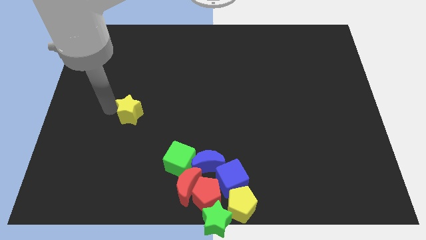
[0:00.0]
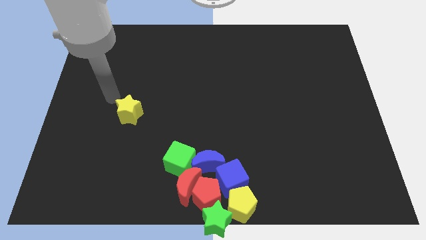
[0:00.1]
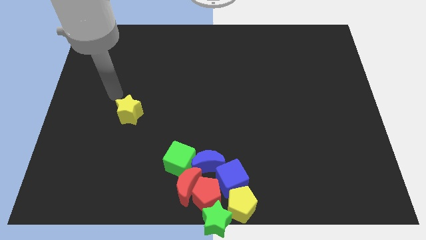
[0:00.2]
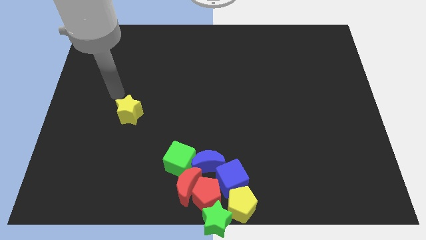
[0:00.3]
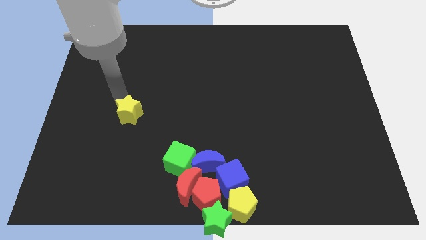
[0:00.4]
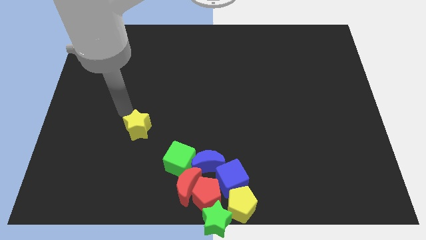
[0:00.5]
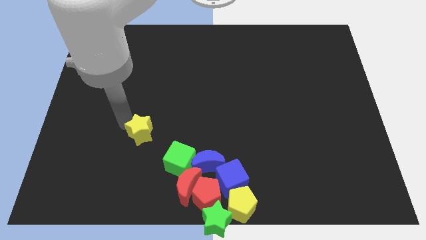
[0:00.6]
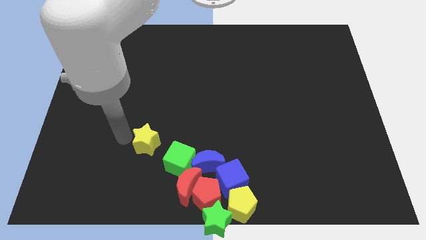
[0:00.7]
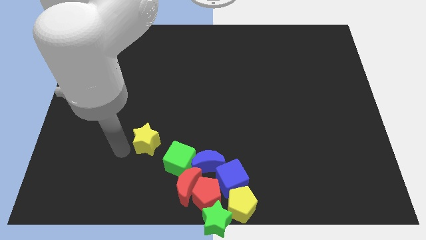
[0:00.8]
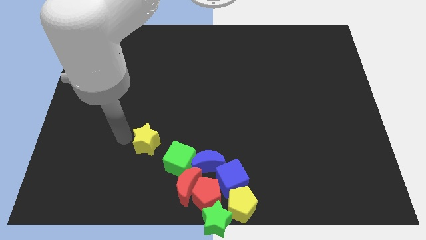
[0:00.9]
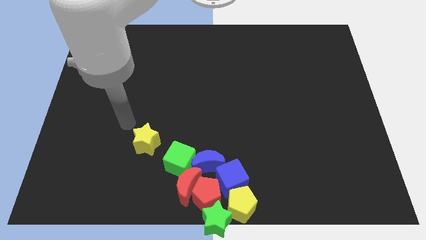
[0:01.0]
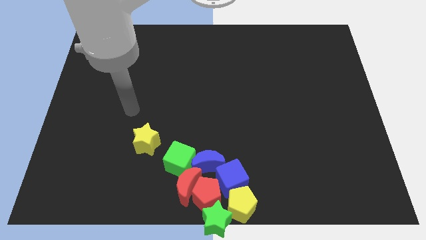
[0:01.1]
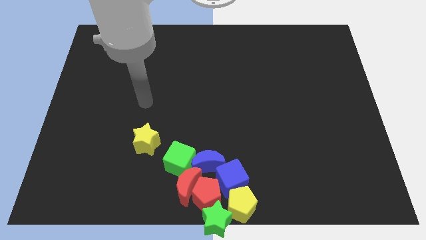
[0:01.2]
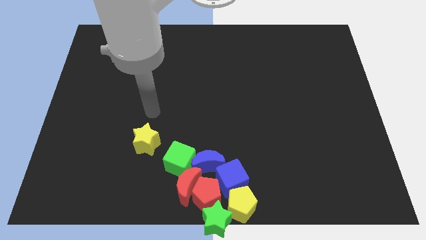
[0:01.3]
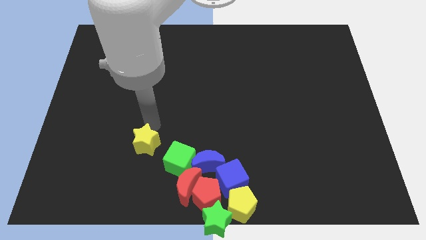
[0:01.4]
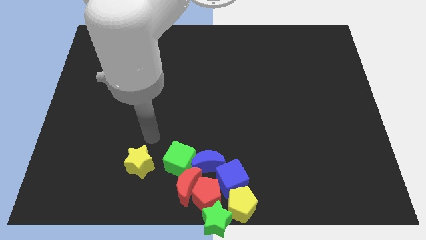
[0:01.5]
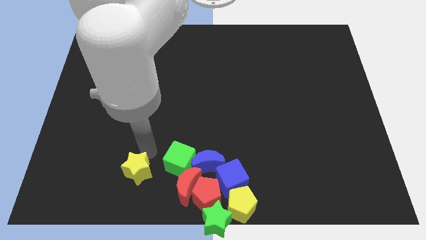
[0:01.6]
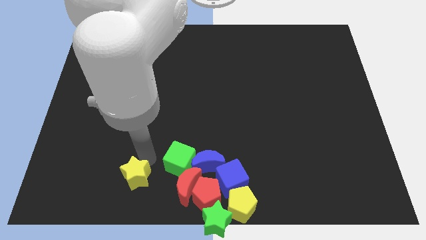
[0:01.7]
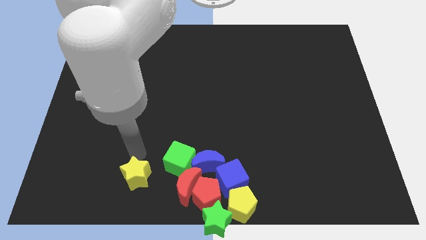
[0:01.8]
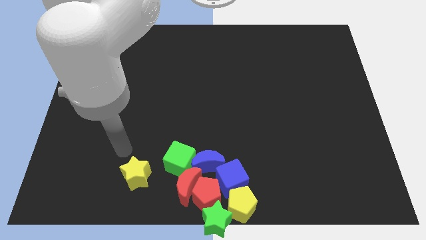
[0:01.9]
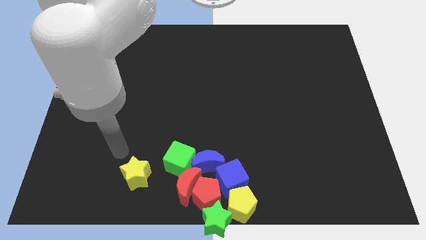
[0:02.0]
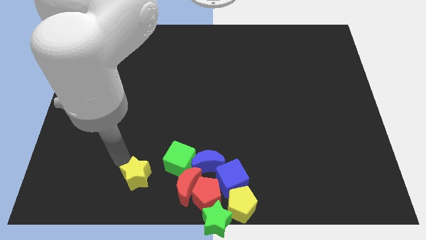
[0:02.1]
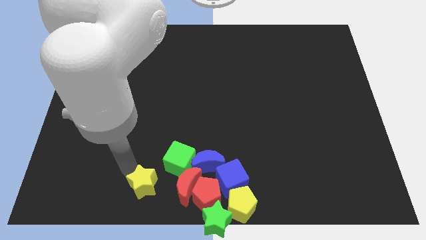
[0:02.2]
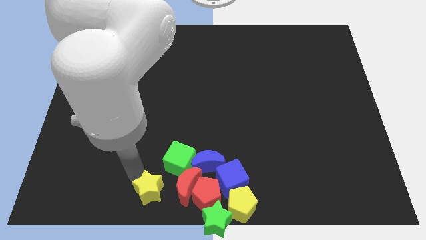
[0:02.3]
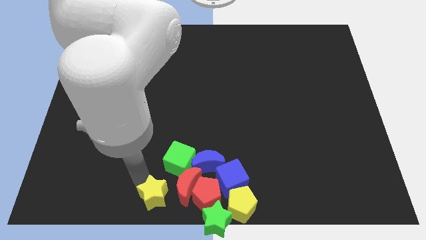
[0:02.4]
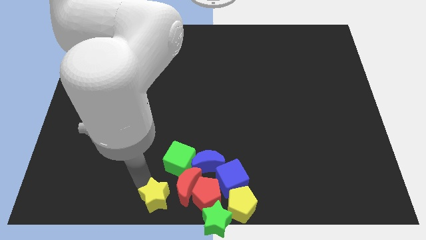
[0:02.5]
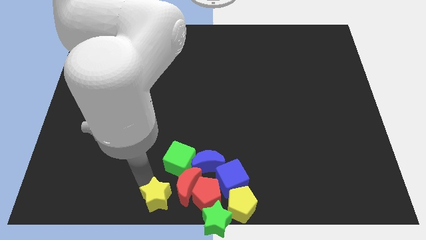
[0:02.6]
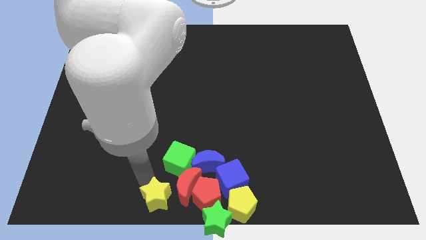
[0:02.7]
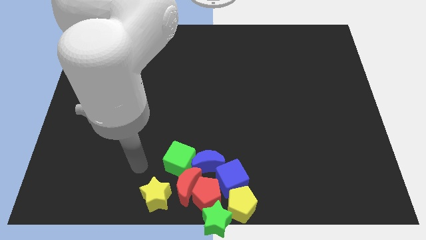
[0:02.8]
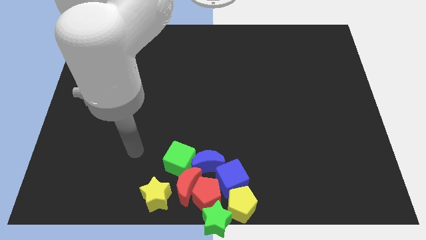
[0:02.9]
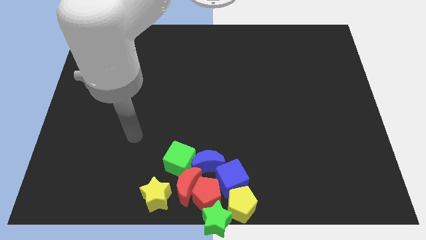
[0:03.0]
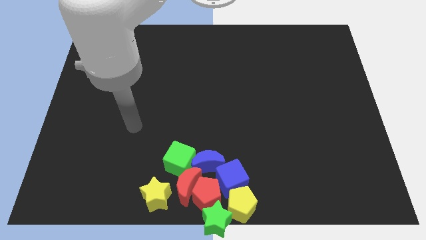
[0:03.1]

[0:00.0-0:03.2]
slide the yellow star close to the red moon

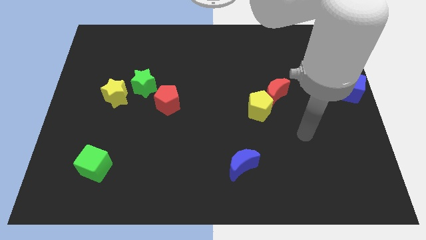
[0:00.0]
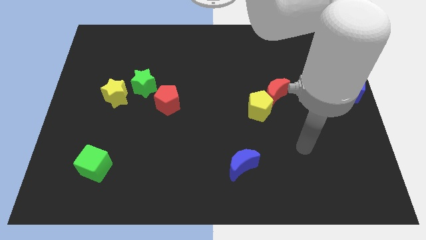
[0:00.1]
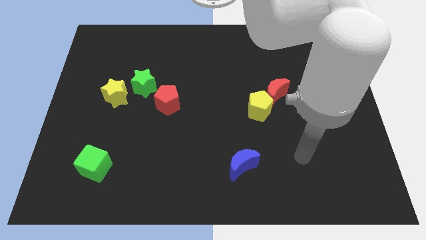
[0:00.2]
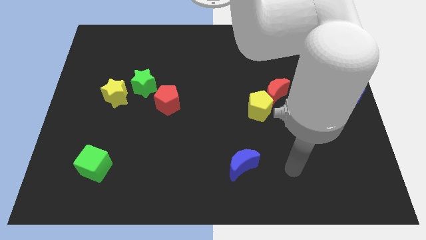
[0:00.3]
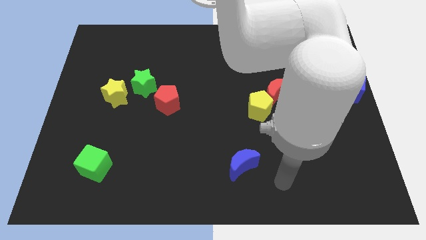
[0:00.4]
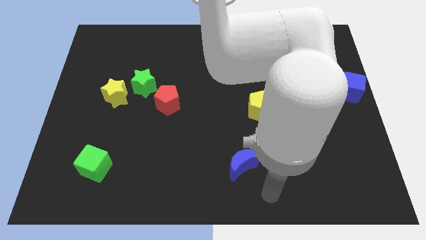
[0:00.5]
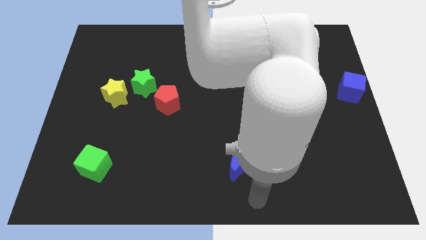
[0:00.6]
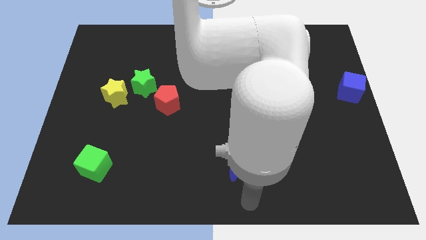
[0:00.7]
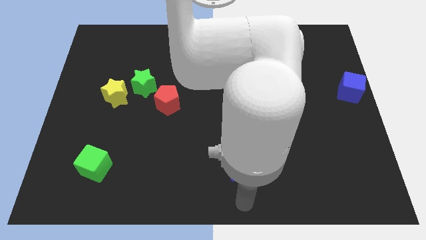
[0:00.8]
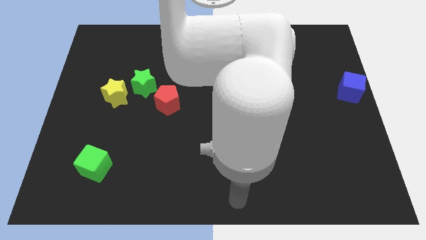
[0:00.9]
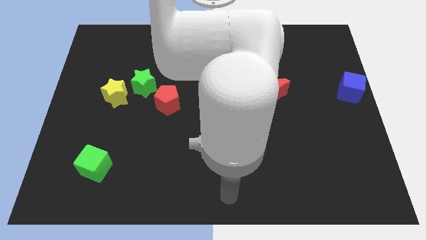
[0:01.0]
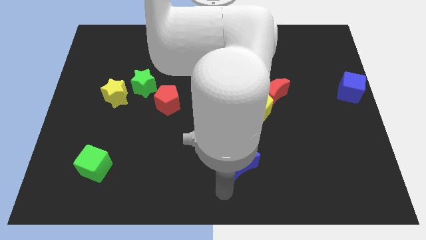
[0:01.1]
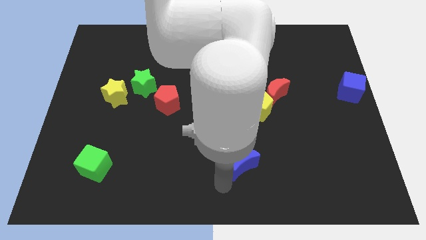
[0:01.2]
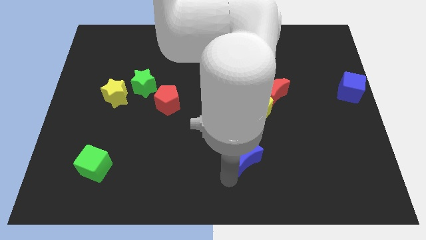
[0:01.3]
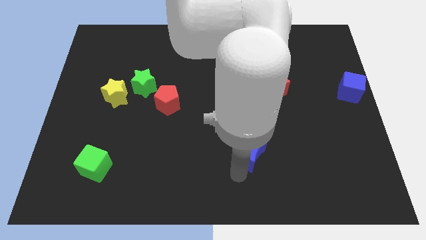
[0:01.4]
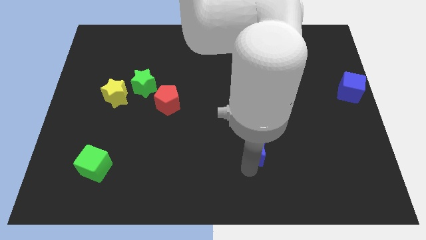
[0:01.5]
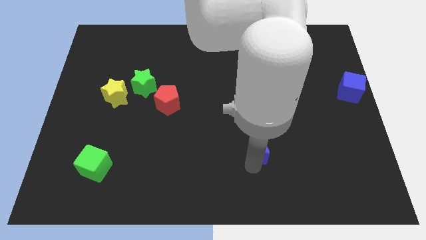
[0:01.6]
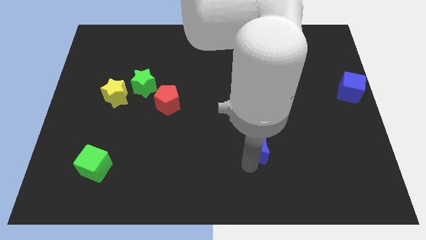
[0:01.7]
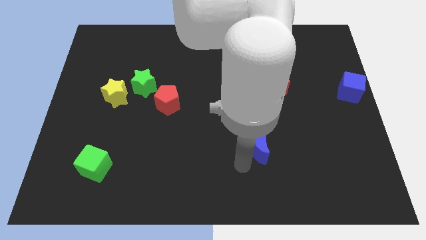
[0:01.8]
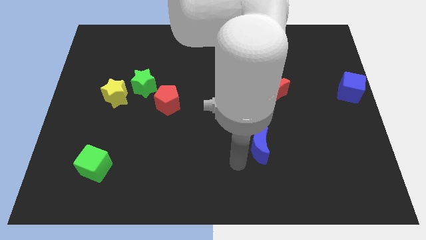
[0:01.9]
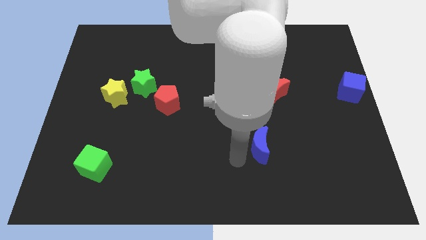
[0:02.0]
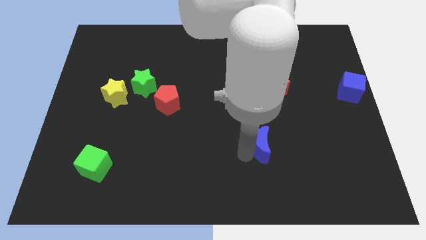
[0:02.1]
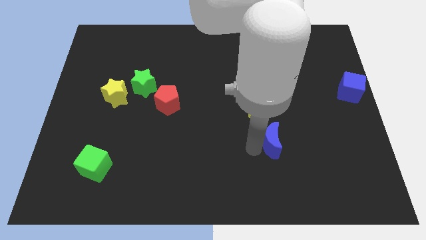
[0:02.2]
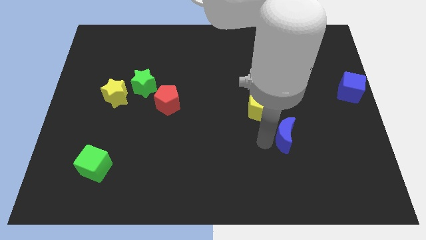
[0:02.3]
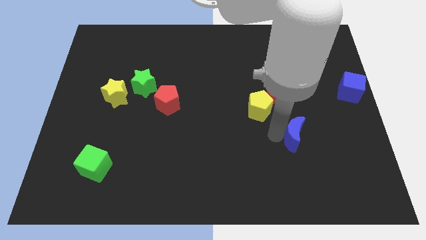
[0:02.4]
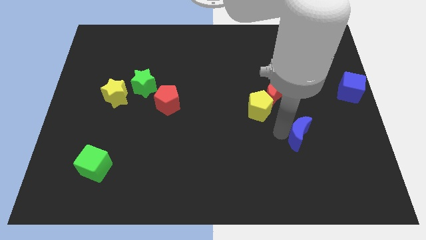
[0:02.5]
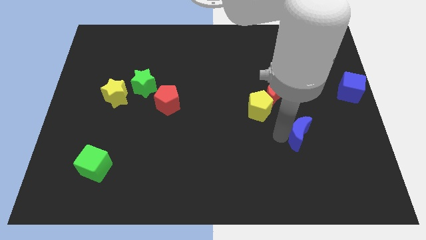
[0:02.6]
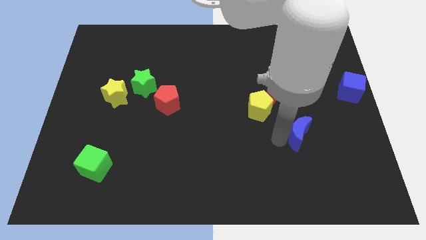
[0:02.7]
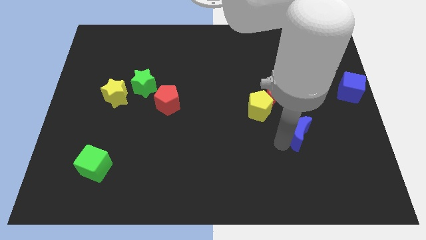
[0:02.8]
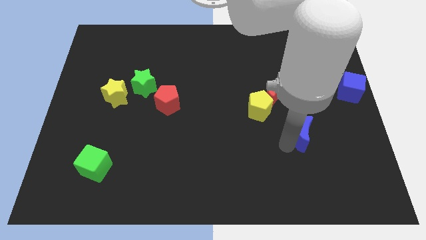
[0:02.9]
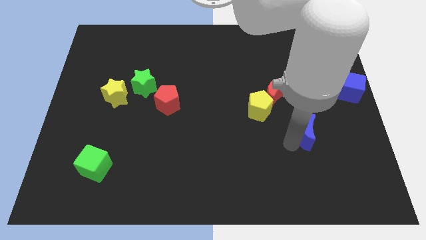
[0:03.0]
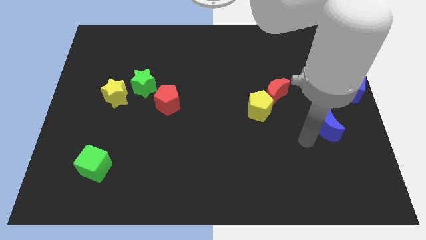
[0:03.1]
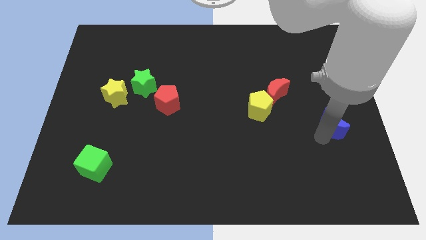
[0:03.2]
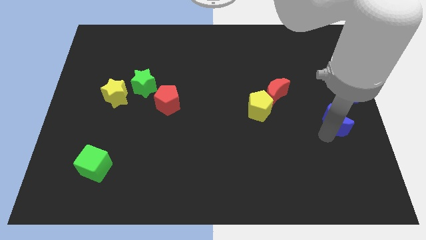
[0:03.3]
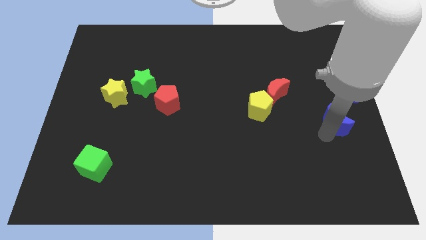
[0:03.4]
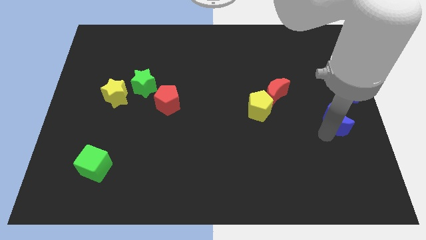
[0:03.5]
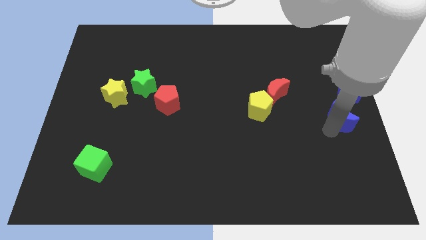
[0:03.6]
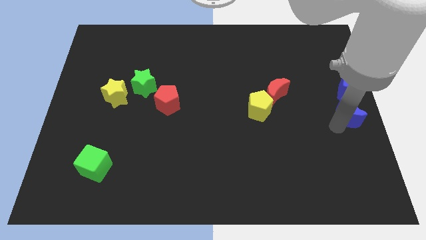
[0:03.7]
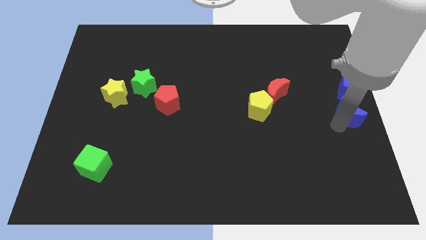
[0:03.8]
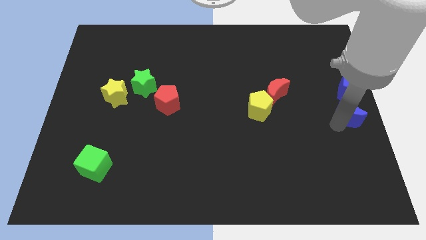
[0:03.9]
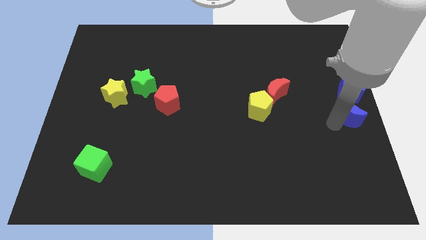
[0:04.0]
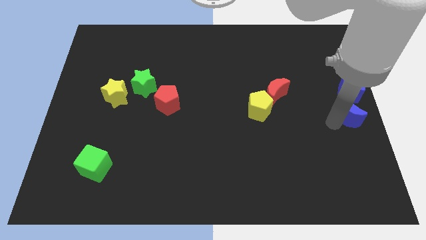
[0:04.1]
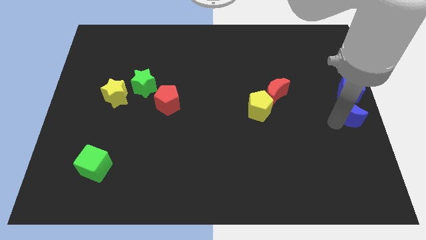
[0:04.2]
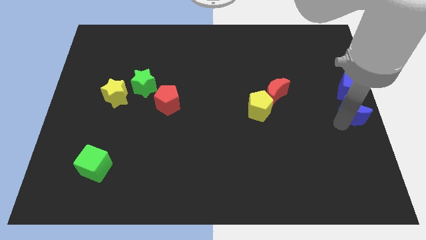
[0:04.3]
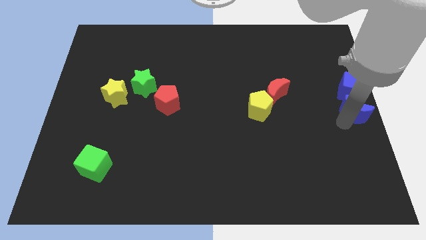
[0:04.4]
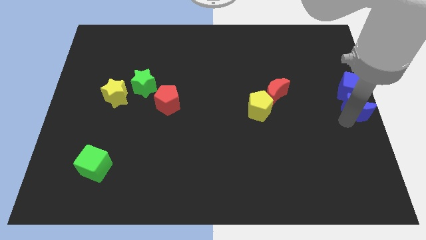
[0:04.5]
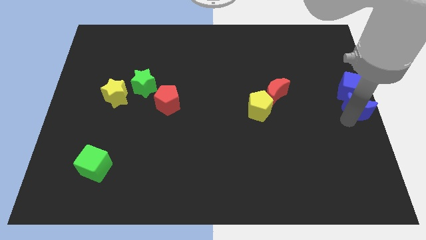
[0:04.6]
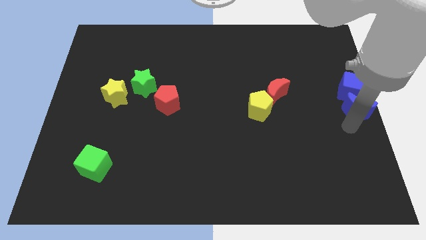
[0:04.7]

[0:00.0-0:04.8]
move the blue moon below the blue cube

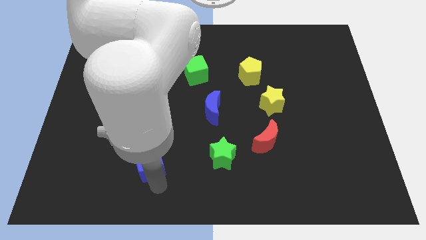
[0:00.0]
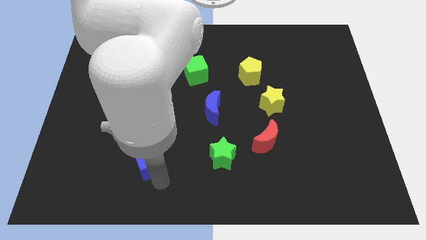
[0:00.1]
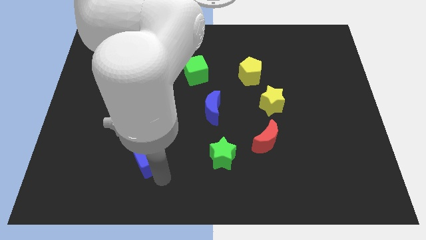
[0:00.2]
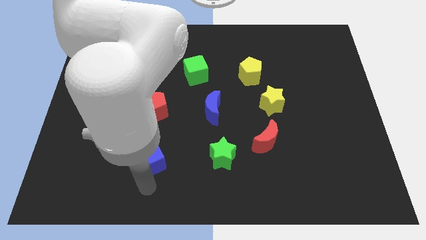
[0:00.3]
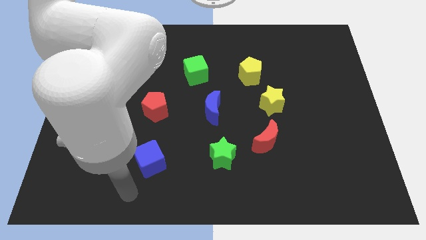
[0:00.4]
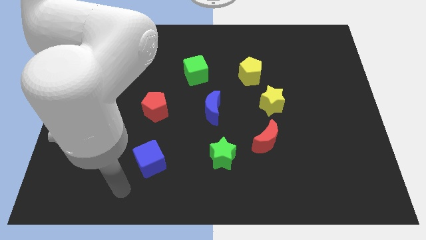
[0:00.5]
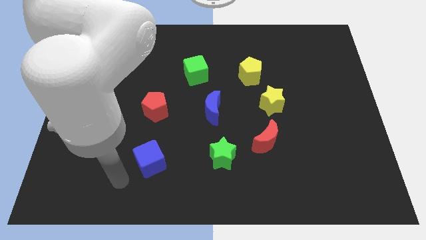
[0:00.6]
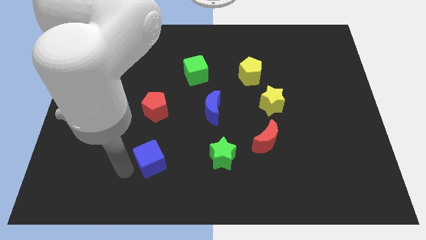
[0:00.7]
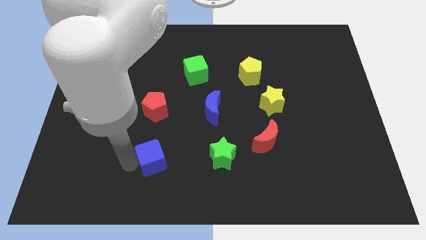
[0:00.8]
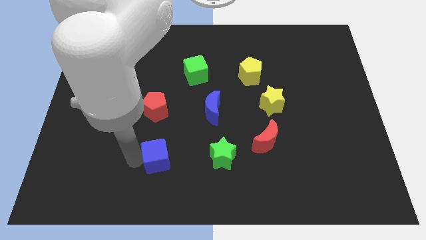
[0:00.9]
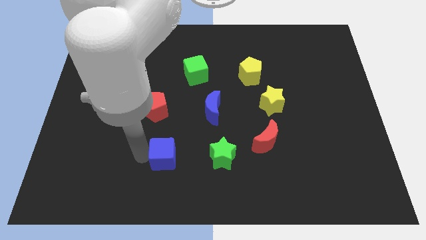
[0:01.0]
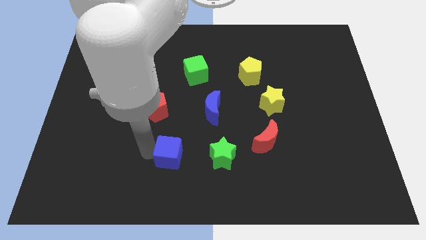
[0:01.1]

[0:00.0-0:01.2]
put the blue cube to the left side of the green star
